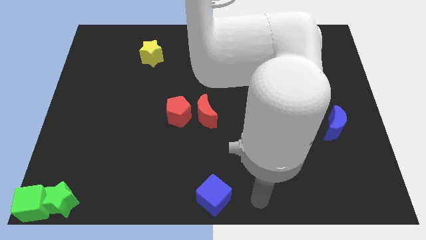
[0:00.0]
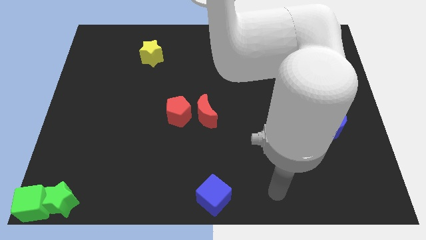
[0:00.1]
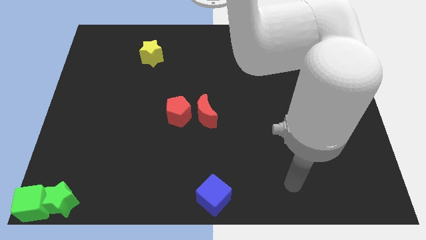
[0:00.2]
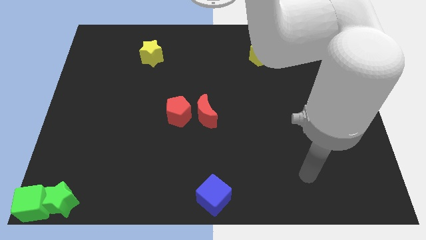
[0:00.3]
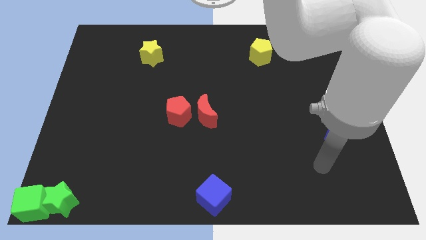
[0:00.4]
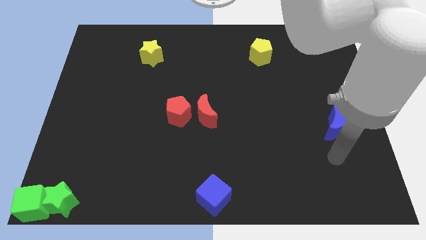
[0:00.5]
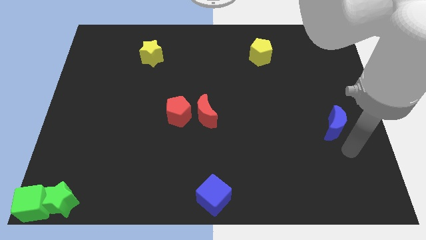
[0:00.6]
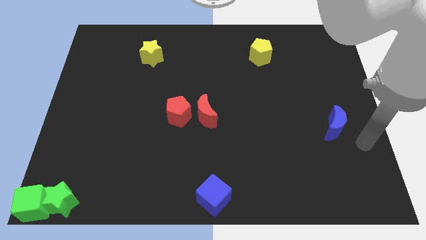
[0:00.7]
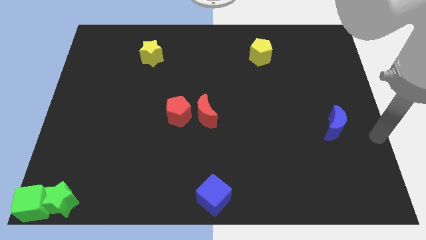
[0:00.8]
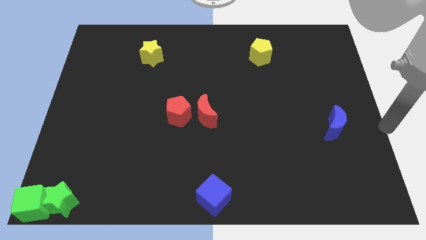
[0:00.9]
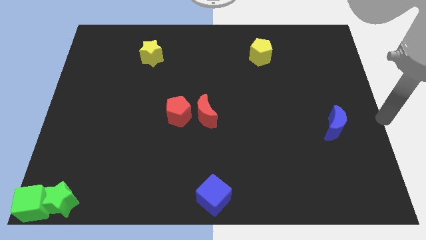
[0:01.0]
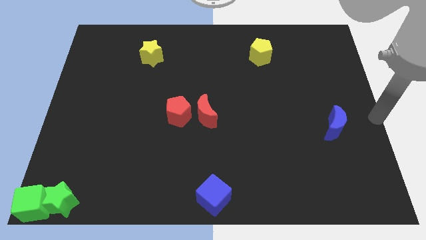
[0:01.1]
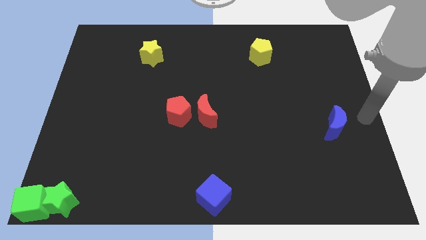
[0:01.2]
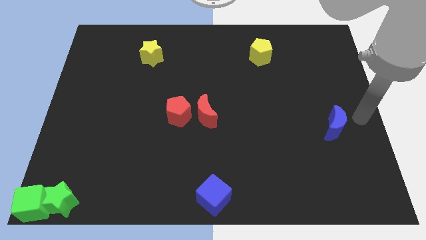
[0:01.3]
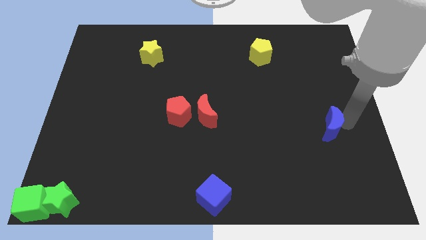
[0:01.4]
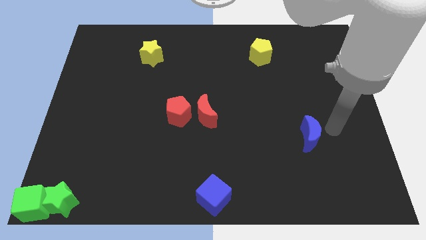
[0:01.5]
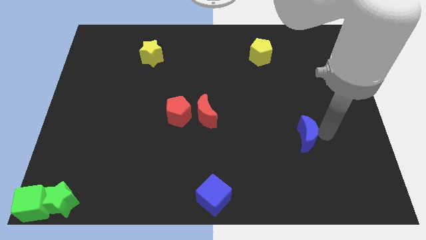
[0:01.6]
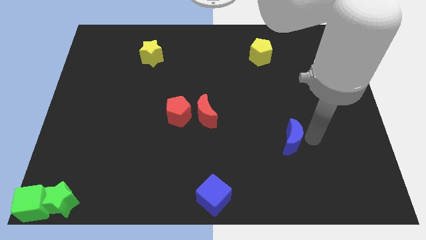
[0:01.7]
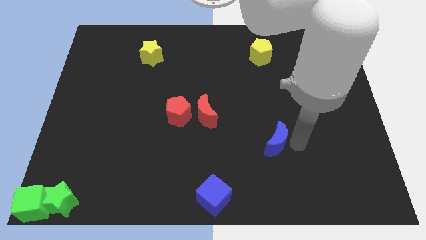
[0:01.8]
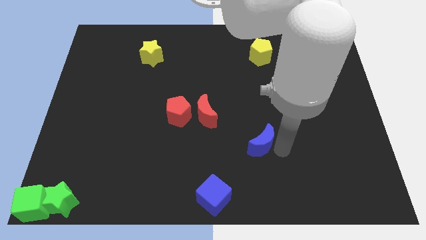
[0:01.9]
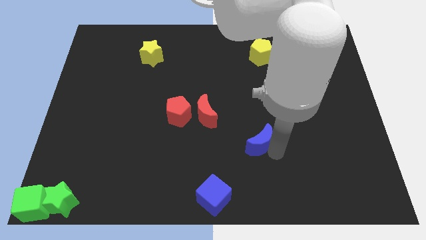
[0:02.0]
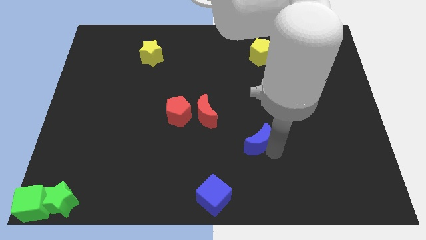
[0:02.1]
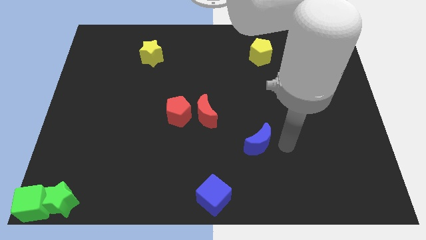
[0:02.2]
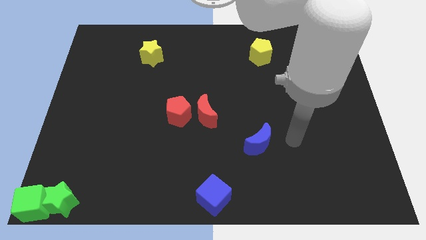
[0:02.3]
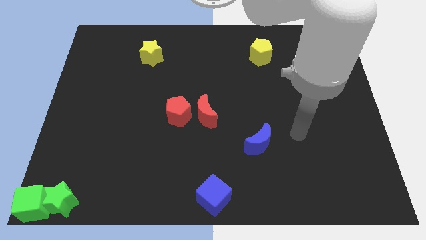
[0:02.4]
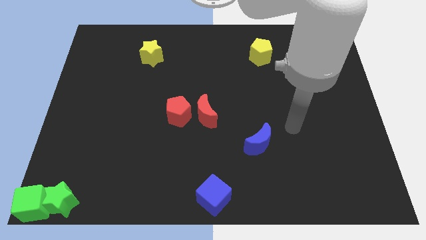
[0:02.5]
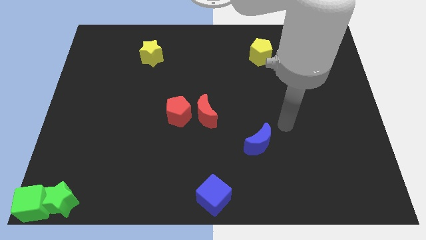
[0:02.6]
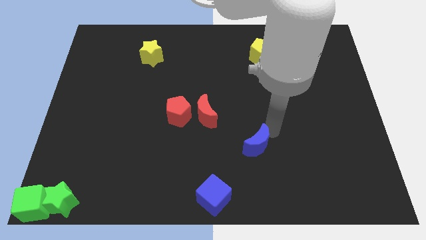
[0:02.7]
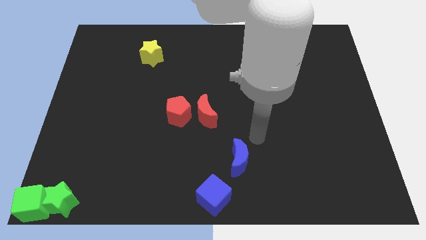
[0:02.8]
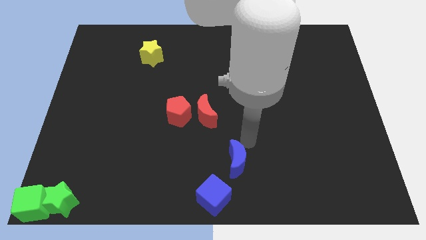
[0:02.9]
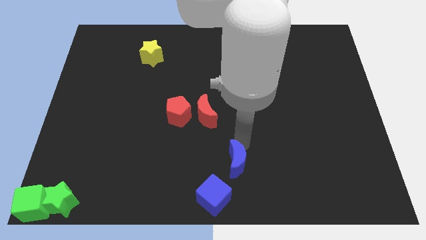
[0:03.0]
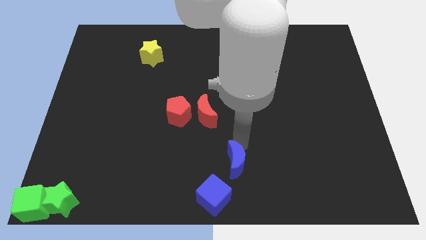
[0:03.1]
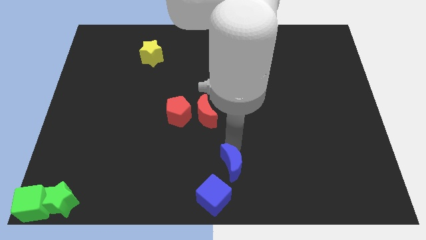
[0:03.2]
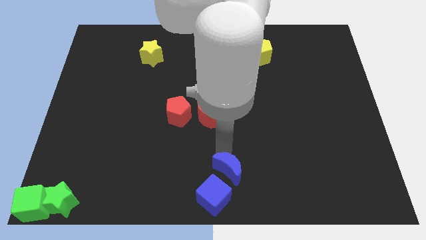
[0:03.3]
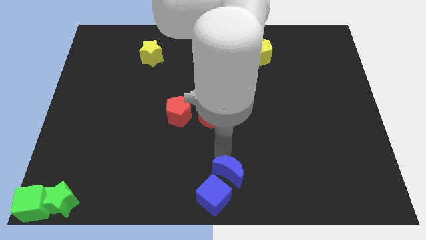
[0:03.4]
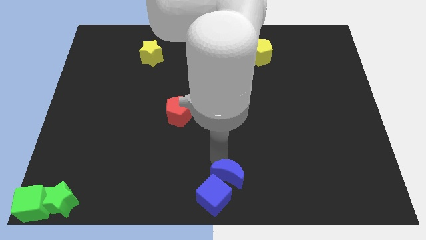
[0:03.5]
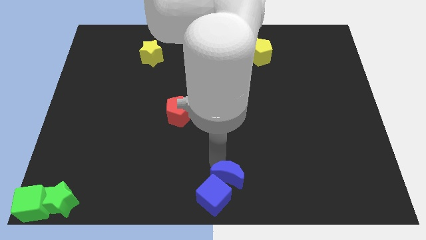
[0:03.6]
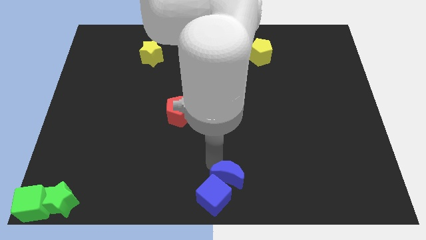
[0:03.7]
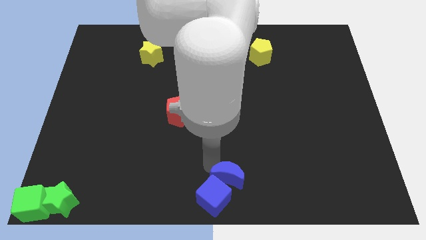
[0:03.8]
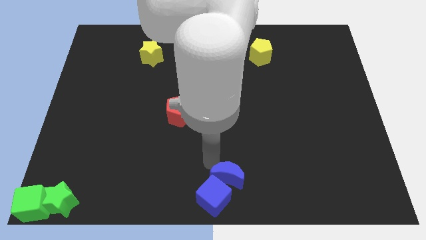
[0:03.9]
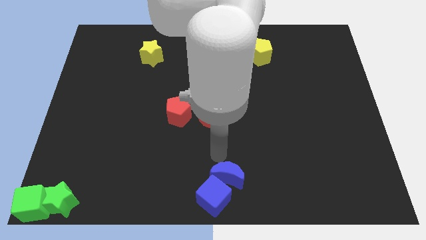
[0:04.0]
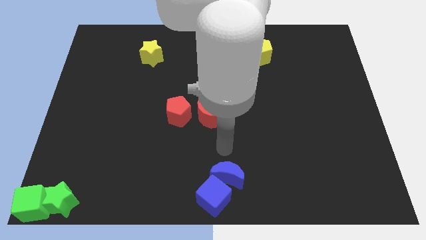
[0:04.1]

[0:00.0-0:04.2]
push the blue crescent towards the top of blue cube

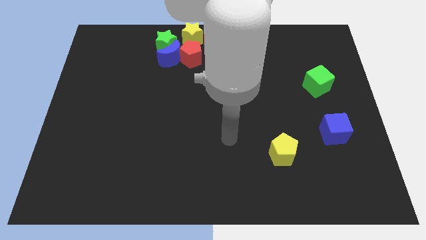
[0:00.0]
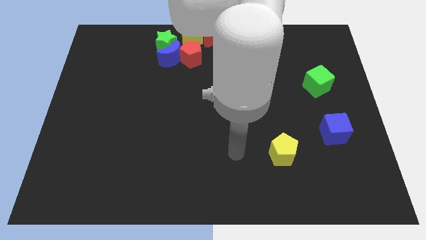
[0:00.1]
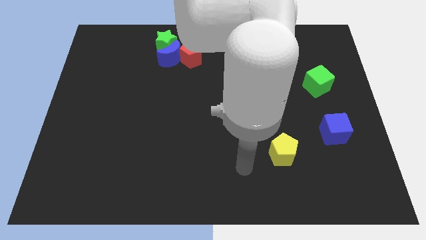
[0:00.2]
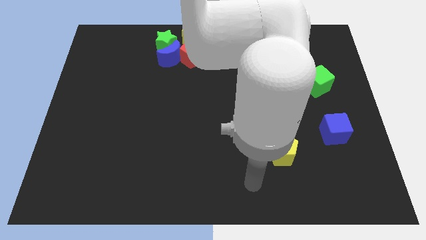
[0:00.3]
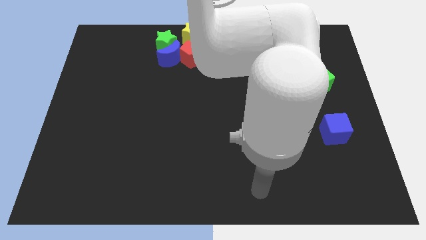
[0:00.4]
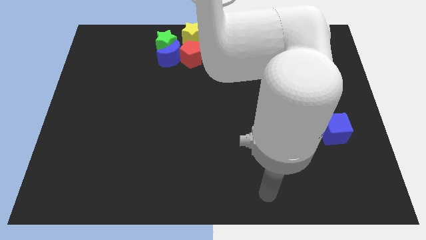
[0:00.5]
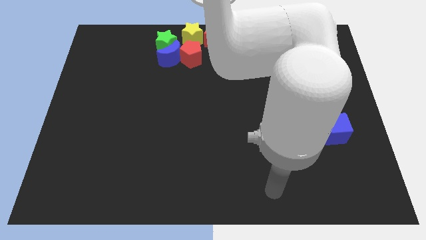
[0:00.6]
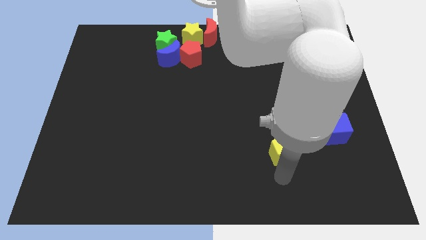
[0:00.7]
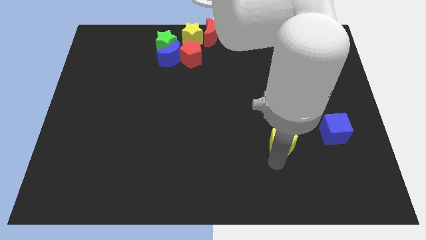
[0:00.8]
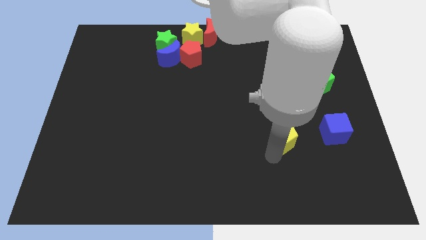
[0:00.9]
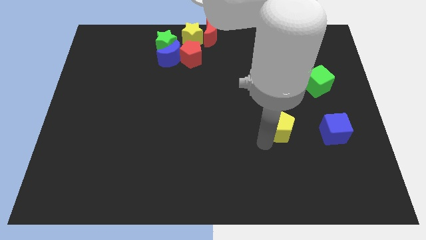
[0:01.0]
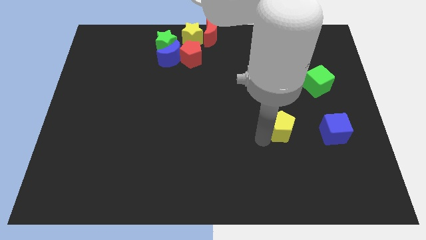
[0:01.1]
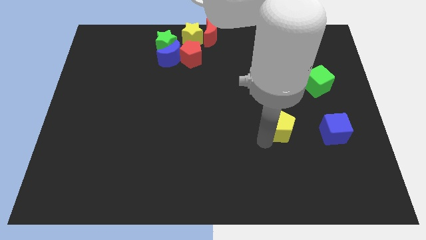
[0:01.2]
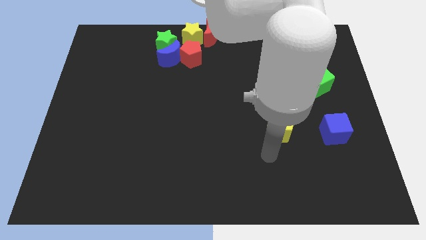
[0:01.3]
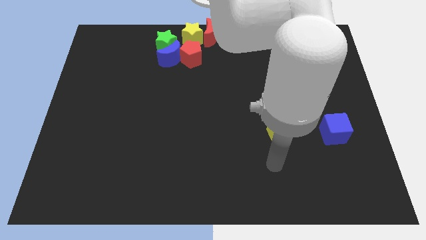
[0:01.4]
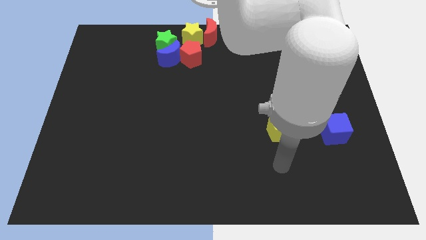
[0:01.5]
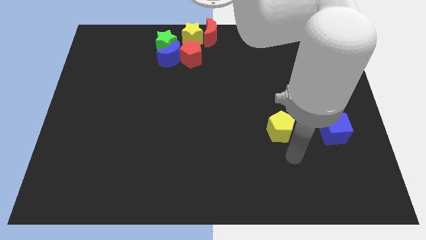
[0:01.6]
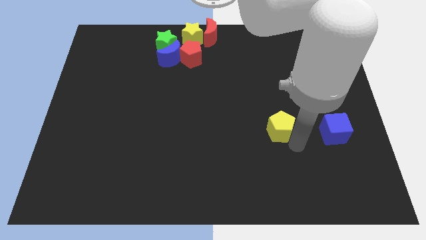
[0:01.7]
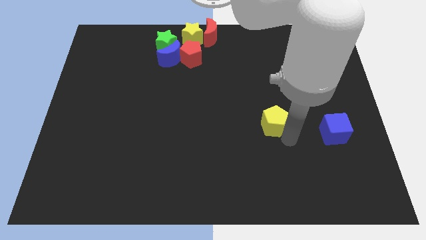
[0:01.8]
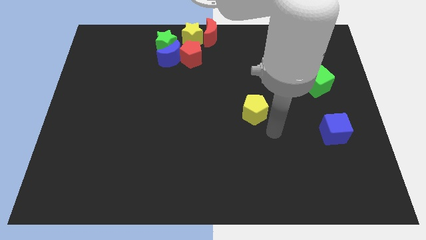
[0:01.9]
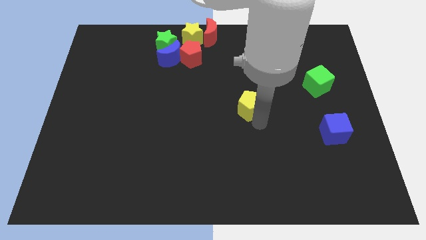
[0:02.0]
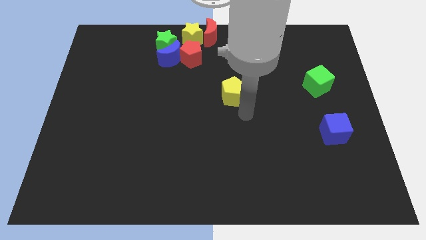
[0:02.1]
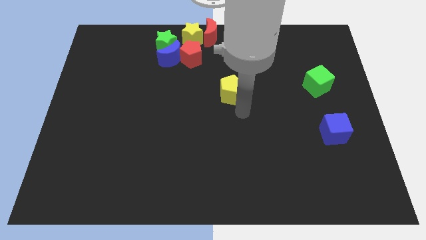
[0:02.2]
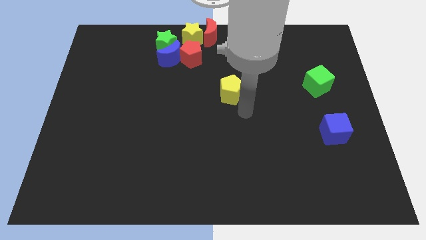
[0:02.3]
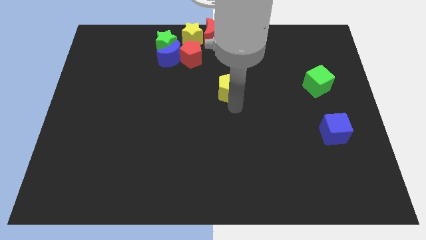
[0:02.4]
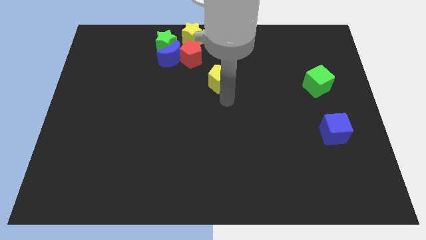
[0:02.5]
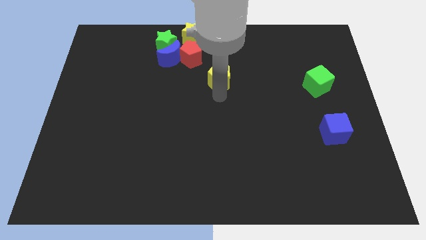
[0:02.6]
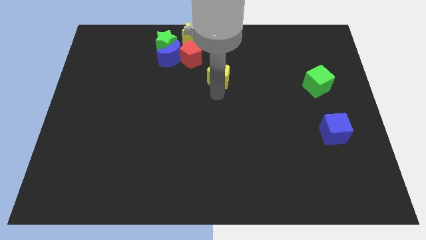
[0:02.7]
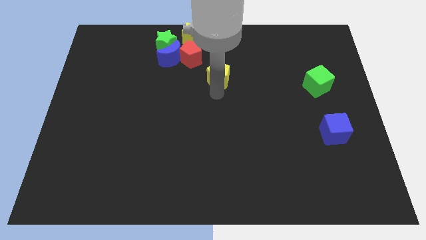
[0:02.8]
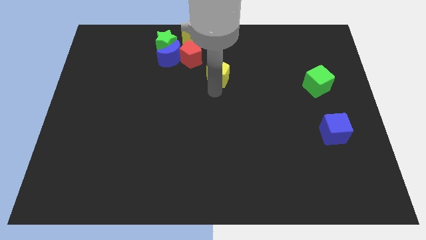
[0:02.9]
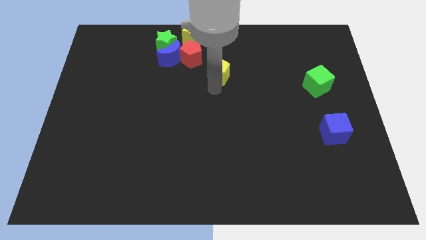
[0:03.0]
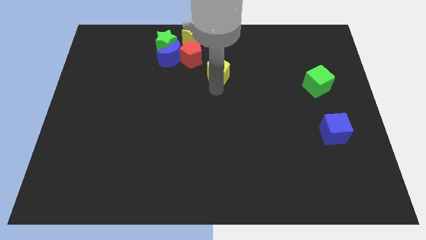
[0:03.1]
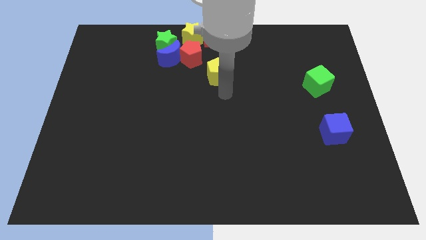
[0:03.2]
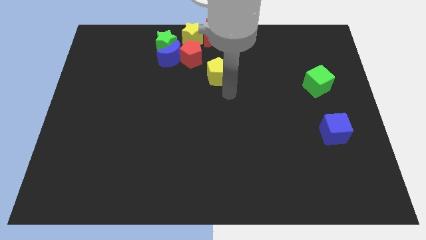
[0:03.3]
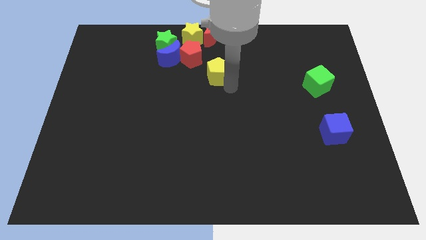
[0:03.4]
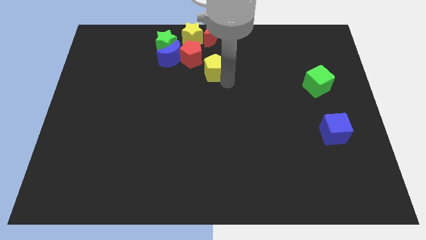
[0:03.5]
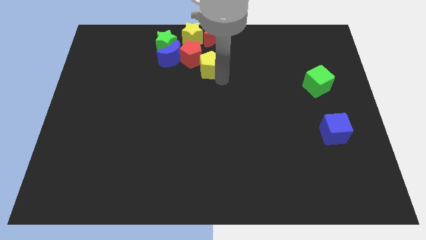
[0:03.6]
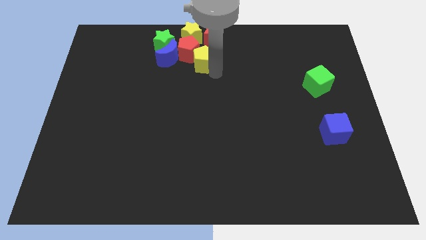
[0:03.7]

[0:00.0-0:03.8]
place the yellow pentagon diagonally right to the red pentagon

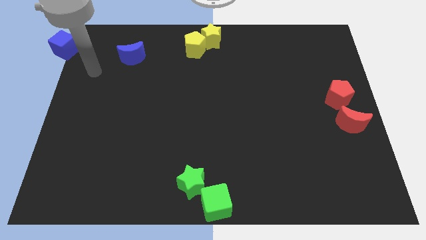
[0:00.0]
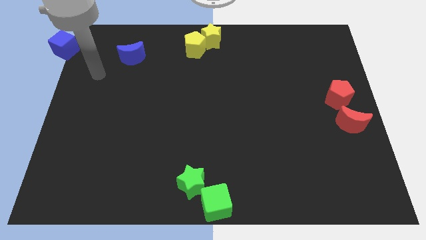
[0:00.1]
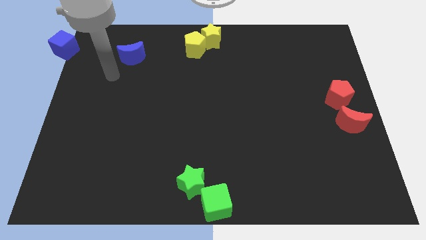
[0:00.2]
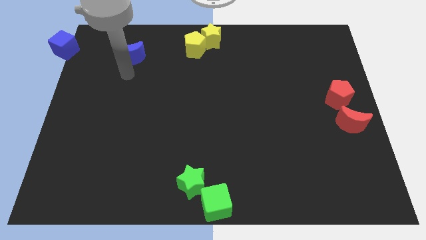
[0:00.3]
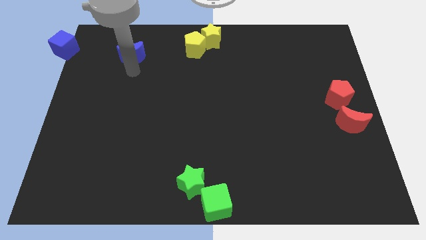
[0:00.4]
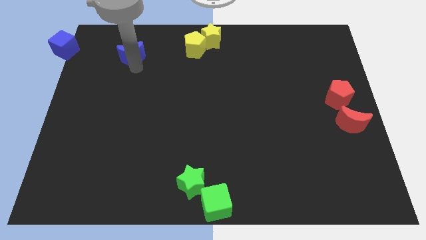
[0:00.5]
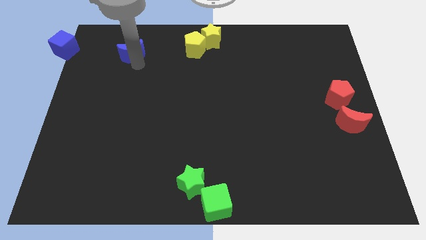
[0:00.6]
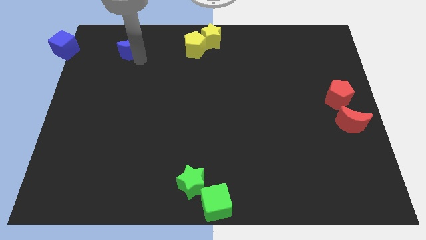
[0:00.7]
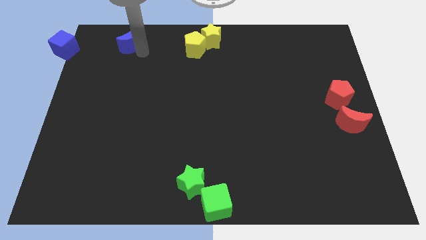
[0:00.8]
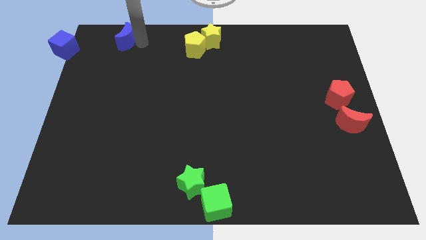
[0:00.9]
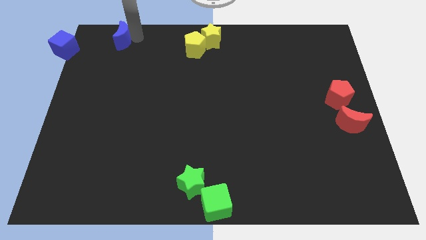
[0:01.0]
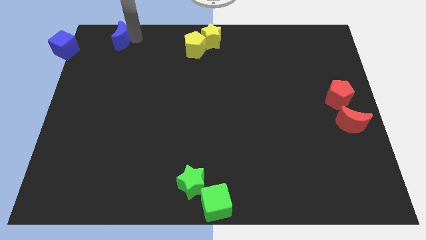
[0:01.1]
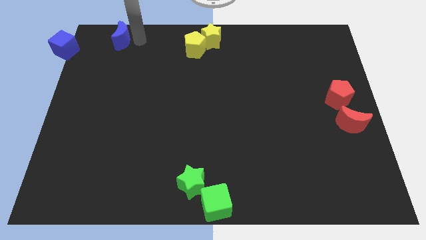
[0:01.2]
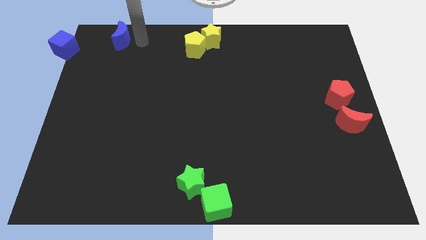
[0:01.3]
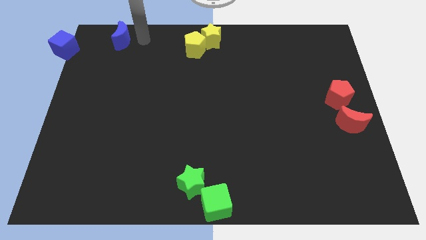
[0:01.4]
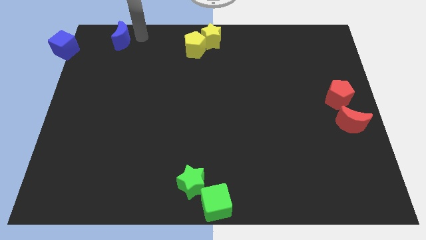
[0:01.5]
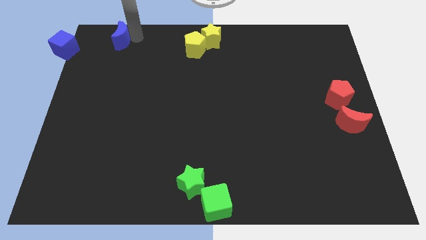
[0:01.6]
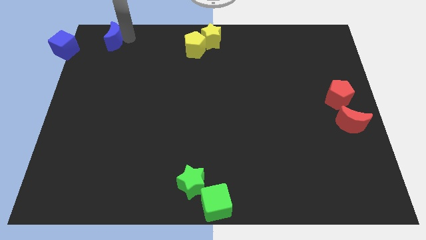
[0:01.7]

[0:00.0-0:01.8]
move the blue moon to the top left side of the board
